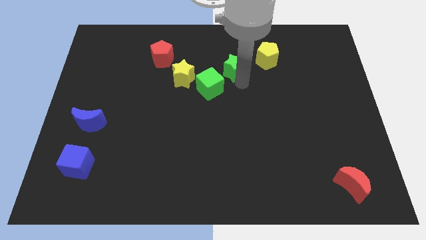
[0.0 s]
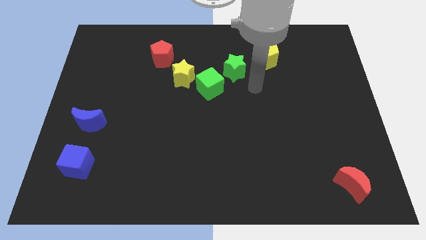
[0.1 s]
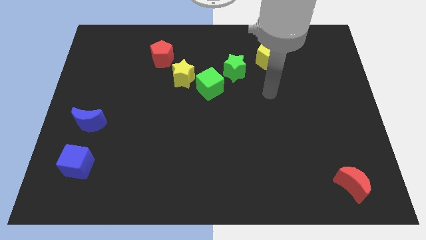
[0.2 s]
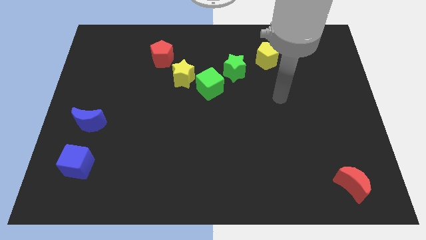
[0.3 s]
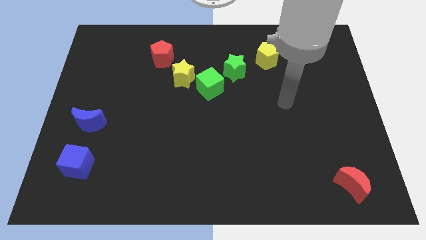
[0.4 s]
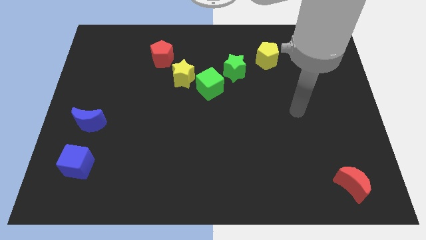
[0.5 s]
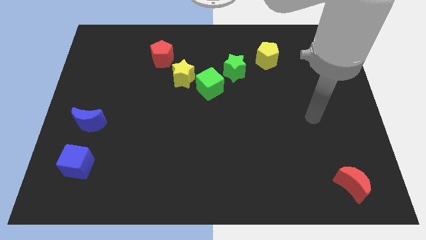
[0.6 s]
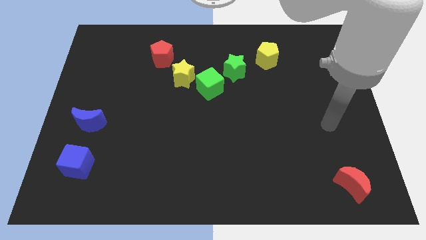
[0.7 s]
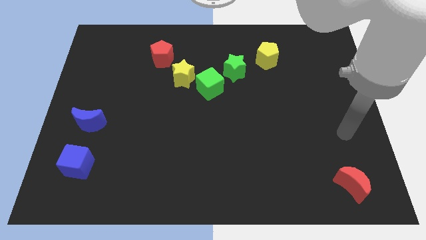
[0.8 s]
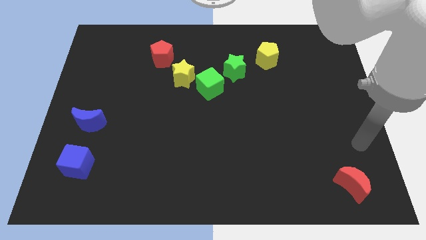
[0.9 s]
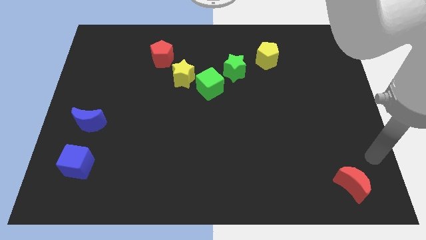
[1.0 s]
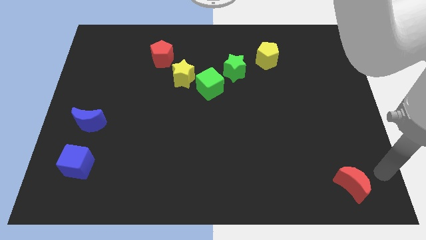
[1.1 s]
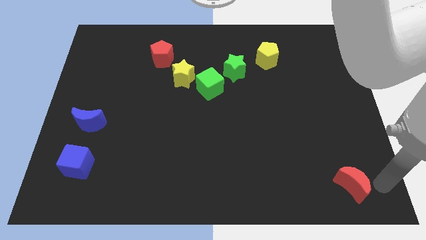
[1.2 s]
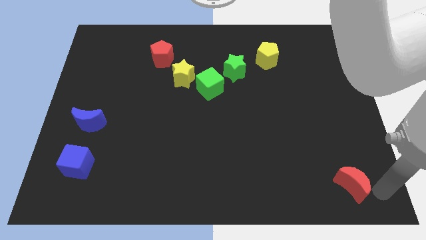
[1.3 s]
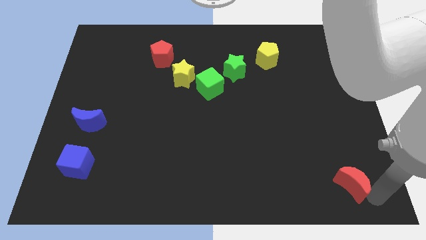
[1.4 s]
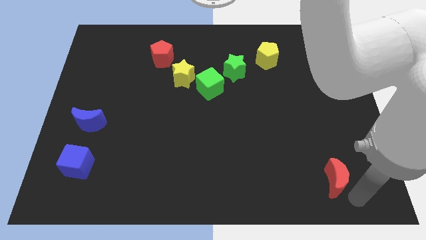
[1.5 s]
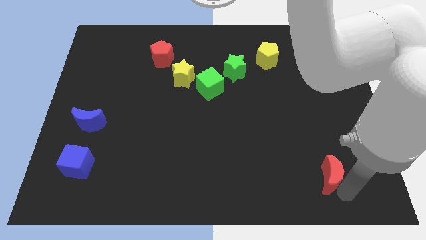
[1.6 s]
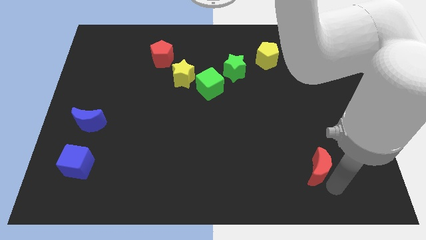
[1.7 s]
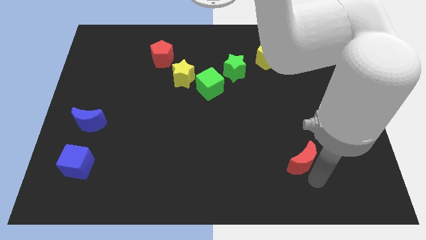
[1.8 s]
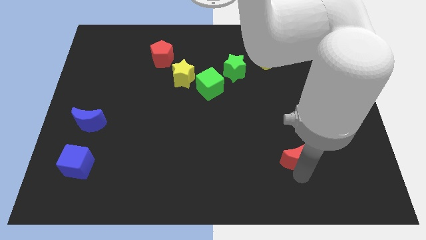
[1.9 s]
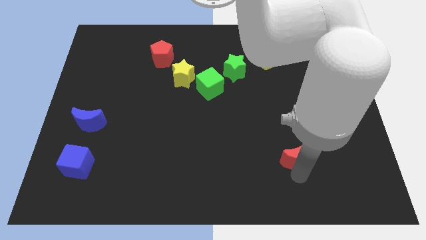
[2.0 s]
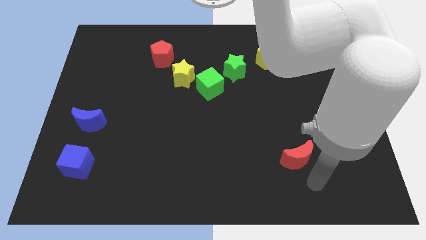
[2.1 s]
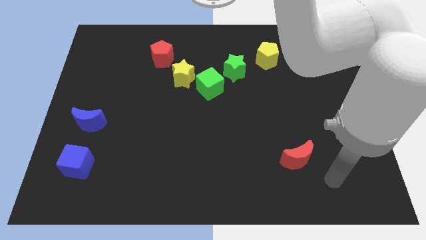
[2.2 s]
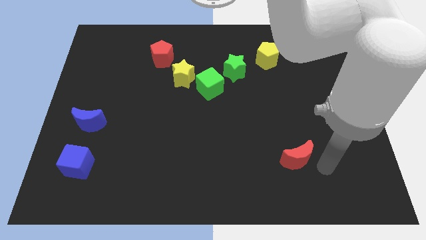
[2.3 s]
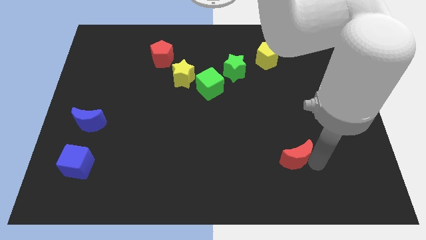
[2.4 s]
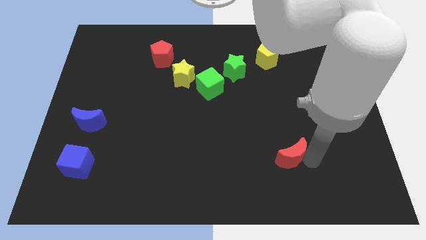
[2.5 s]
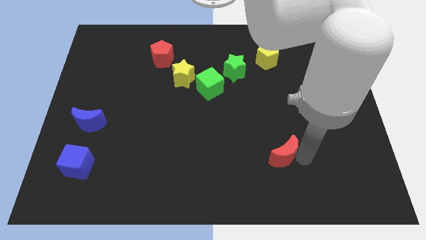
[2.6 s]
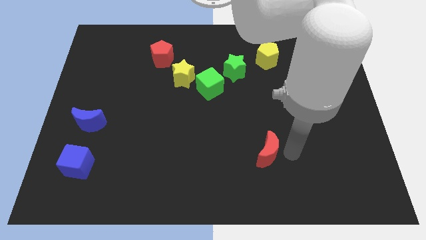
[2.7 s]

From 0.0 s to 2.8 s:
push the red crescent to the bottom of the yellow pentagon

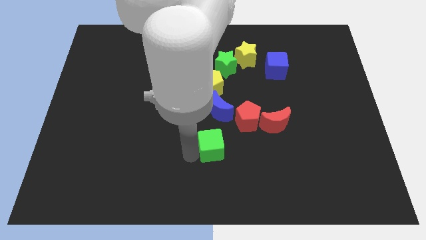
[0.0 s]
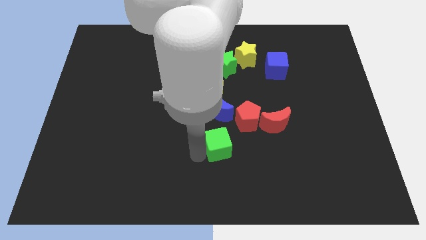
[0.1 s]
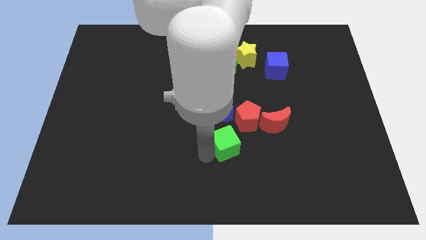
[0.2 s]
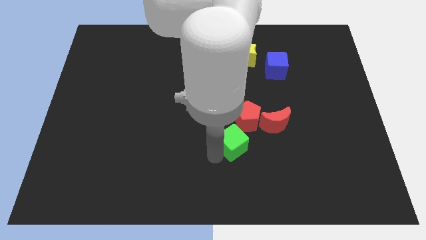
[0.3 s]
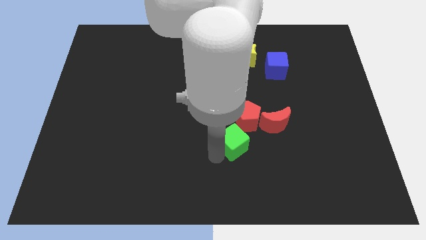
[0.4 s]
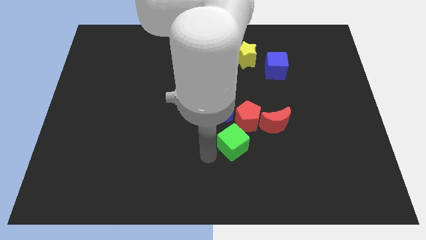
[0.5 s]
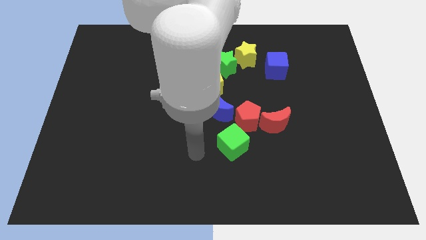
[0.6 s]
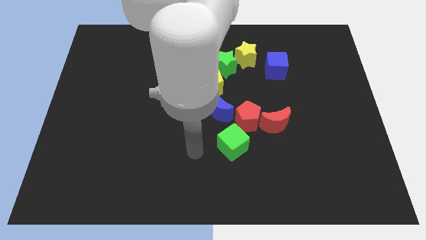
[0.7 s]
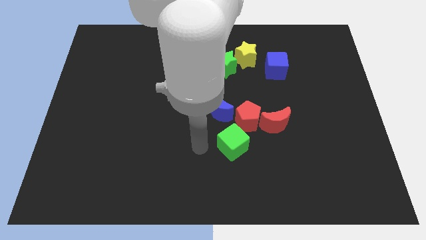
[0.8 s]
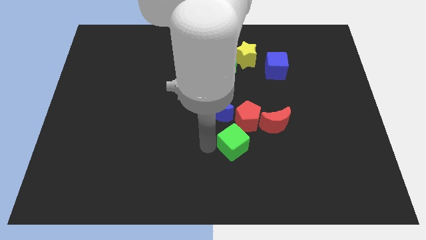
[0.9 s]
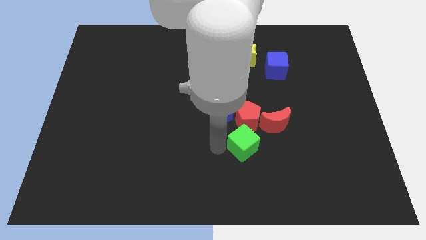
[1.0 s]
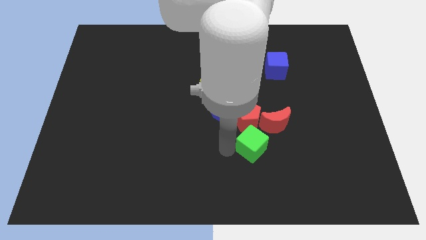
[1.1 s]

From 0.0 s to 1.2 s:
place the green cube below the red pentagon

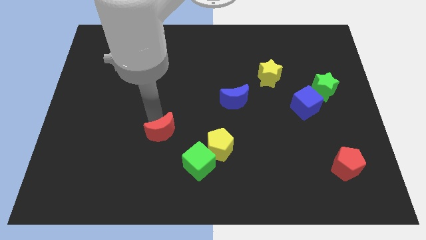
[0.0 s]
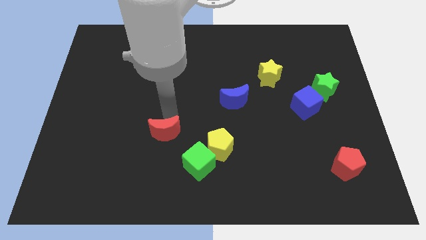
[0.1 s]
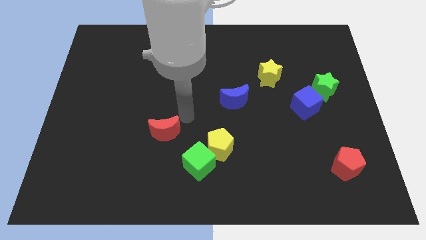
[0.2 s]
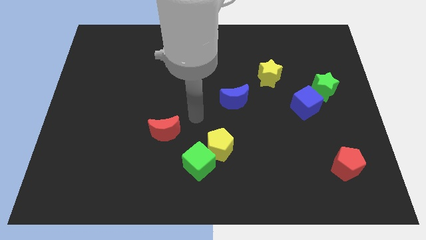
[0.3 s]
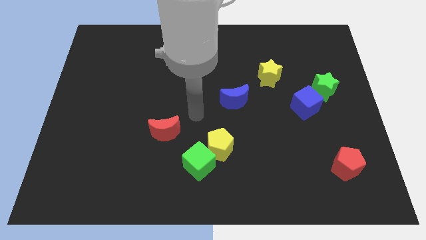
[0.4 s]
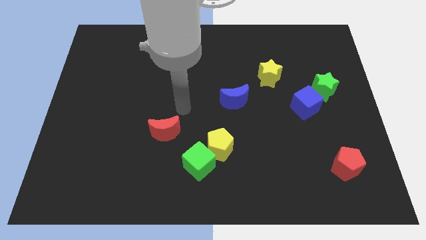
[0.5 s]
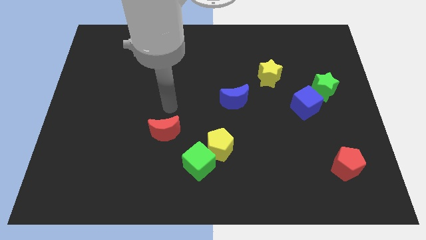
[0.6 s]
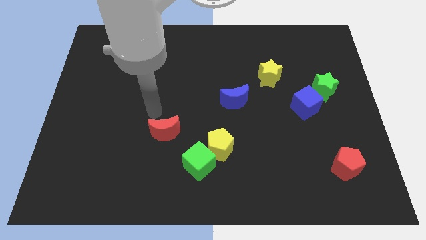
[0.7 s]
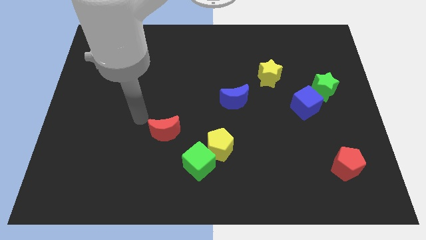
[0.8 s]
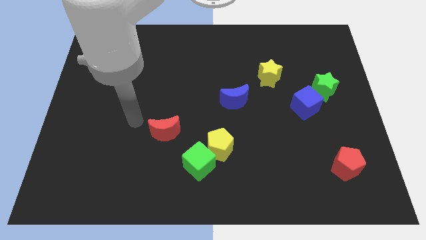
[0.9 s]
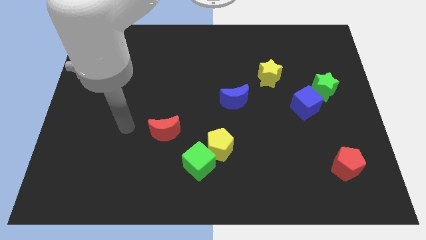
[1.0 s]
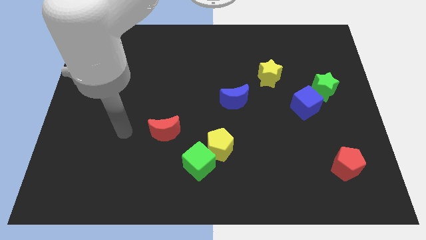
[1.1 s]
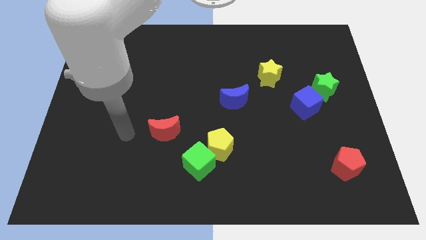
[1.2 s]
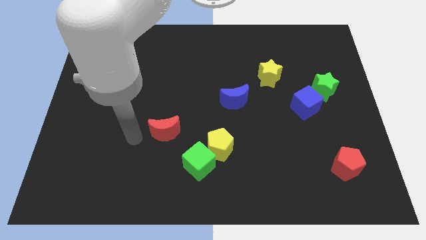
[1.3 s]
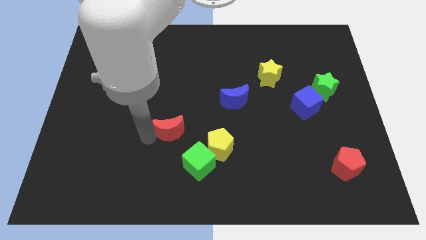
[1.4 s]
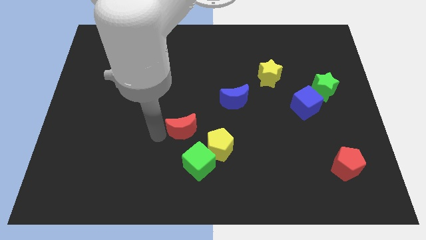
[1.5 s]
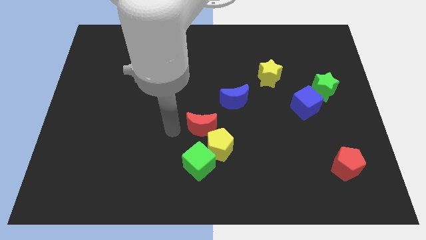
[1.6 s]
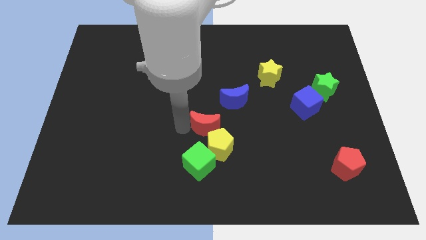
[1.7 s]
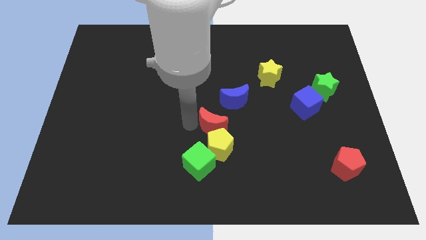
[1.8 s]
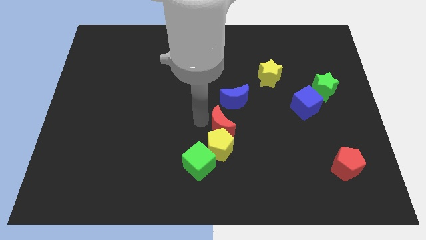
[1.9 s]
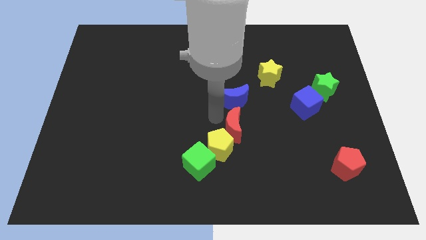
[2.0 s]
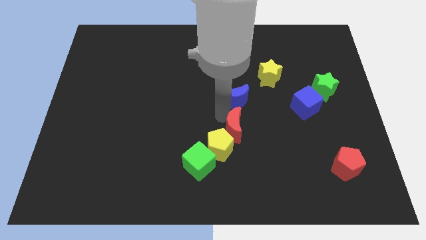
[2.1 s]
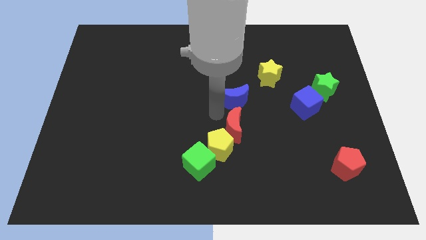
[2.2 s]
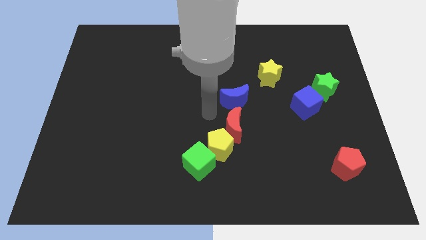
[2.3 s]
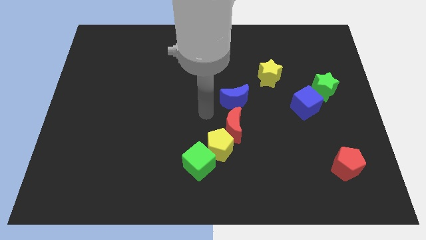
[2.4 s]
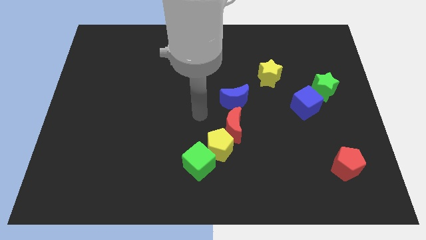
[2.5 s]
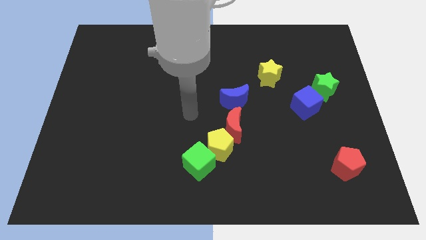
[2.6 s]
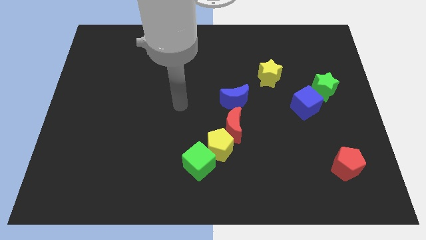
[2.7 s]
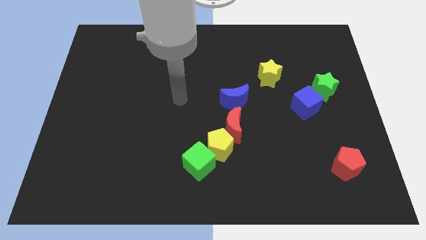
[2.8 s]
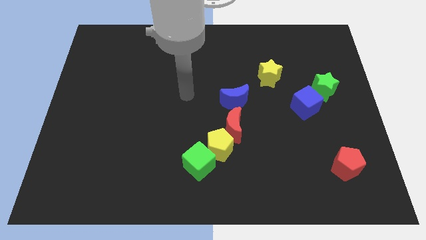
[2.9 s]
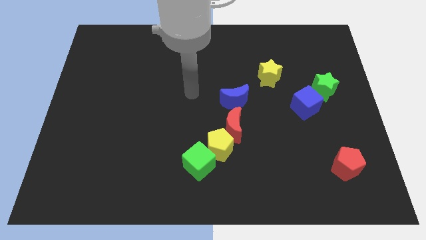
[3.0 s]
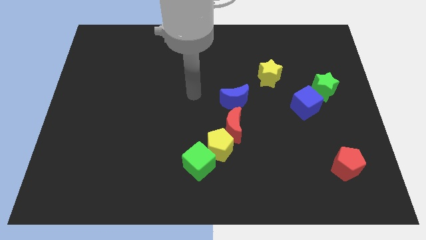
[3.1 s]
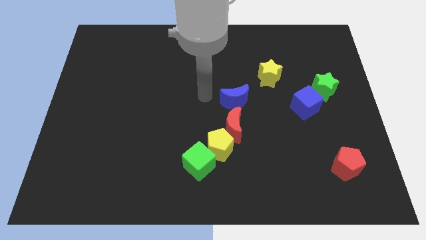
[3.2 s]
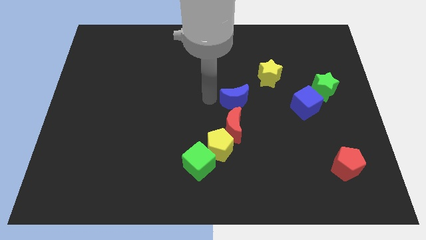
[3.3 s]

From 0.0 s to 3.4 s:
move the red crescent to the top right of the yellow pentagon

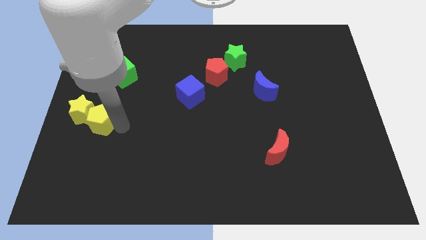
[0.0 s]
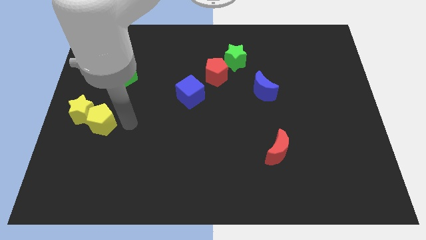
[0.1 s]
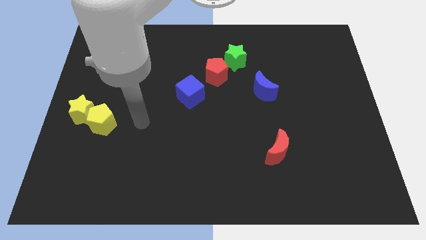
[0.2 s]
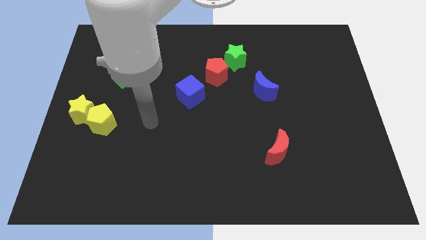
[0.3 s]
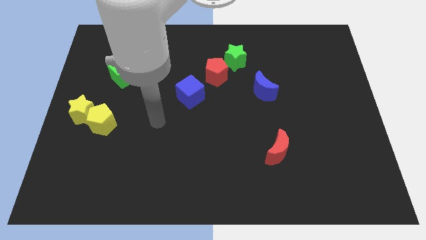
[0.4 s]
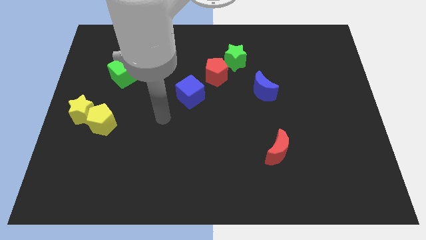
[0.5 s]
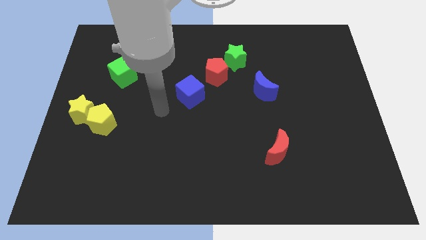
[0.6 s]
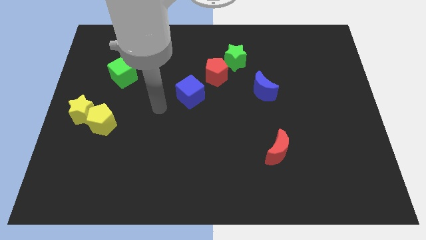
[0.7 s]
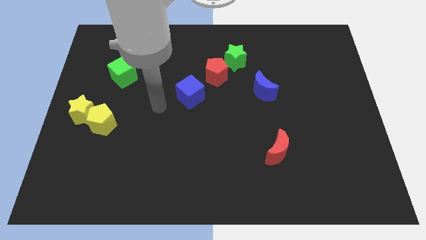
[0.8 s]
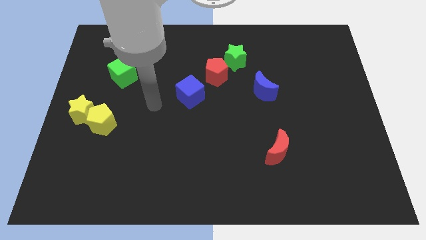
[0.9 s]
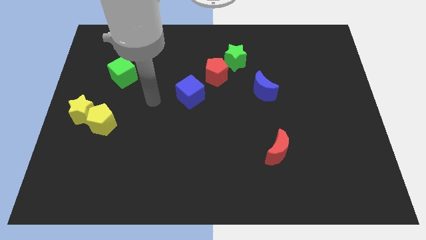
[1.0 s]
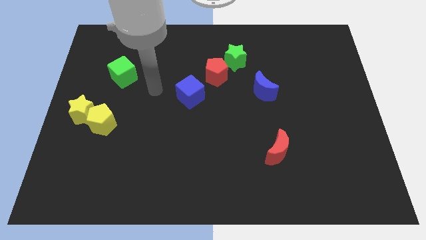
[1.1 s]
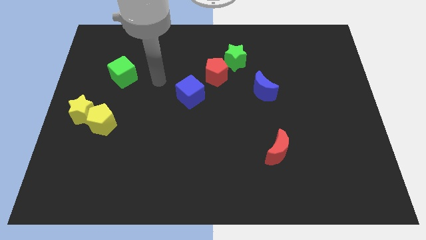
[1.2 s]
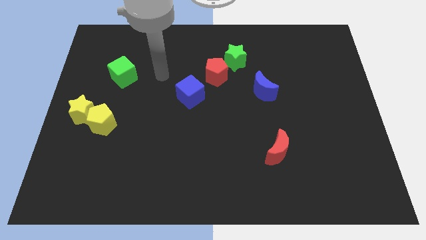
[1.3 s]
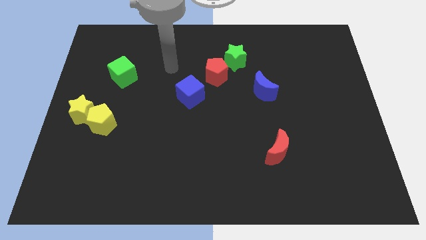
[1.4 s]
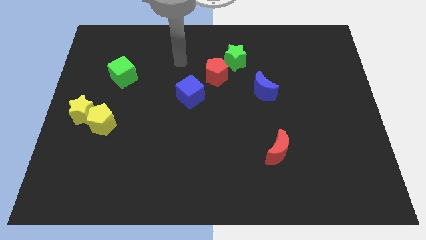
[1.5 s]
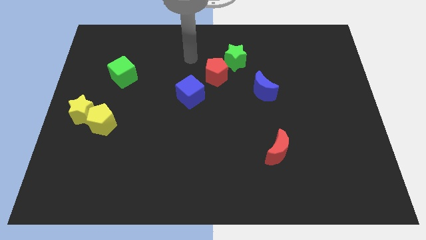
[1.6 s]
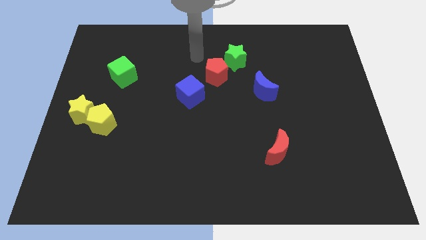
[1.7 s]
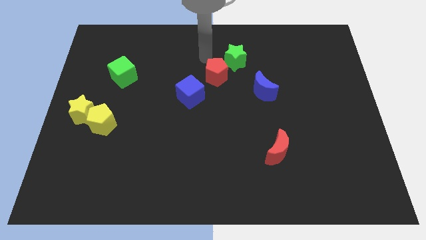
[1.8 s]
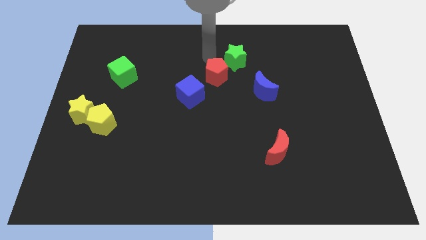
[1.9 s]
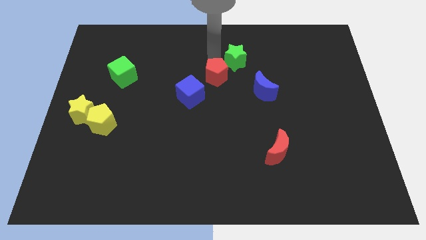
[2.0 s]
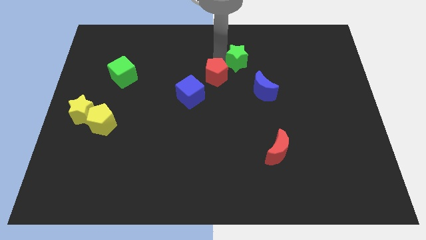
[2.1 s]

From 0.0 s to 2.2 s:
touch the green star at the left side
